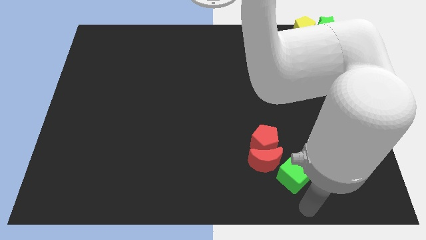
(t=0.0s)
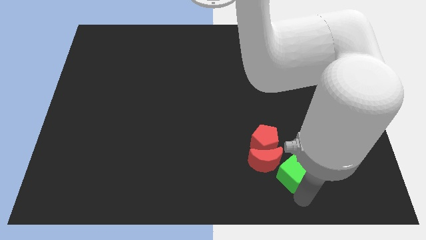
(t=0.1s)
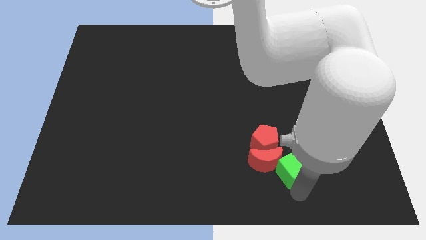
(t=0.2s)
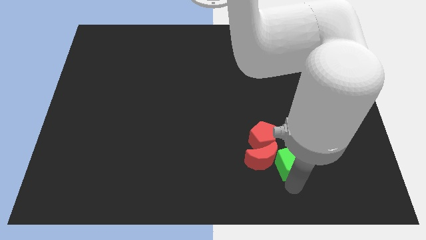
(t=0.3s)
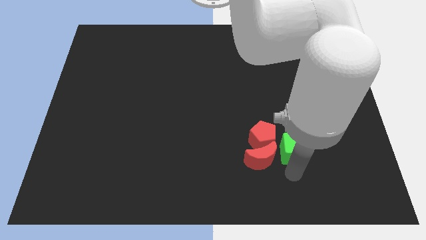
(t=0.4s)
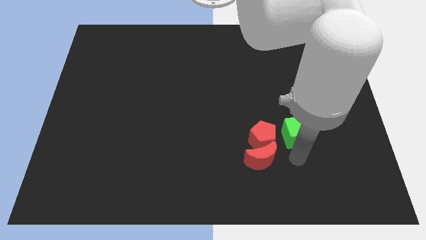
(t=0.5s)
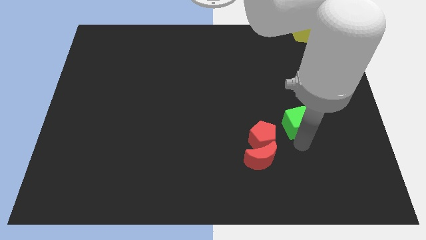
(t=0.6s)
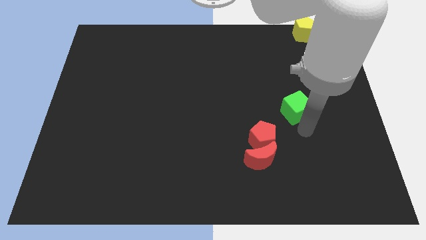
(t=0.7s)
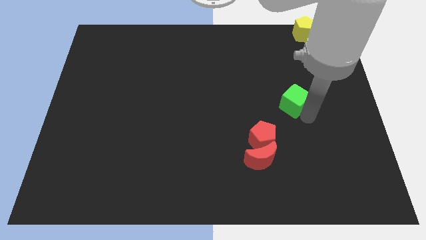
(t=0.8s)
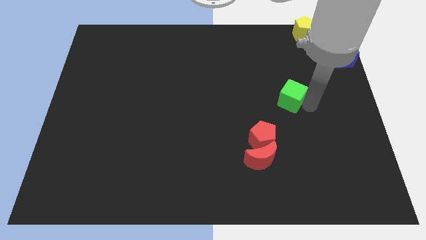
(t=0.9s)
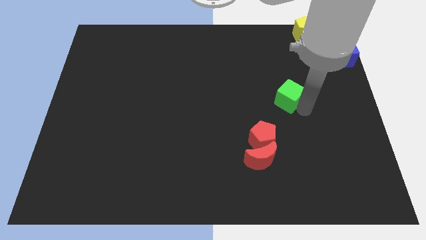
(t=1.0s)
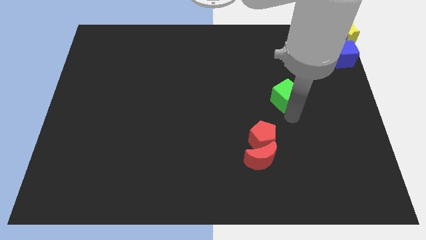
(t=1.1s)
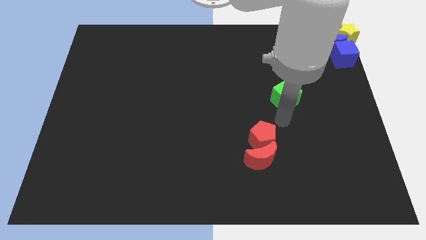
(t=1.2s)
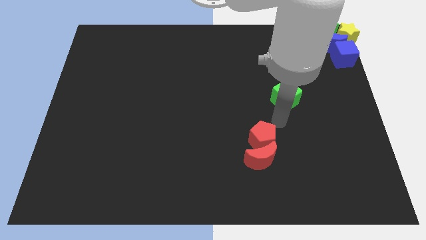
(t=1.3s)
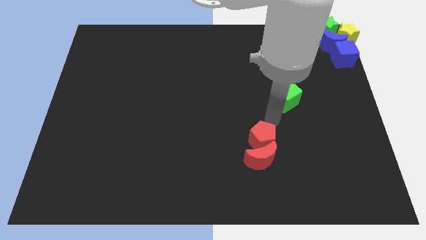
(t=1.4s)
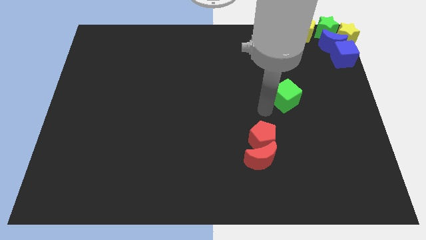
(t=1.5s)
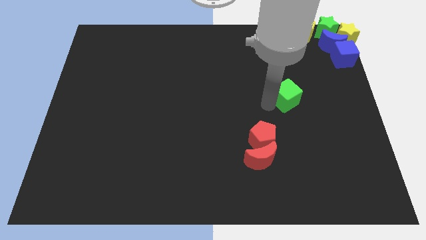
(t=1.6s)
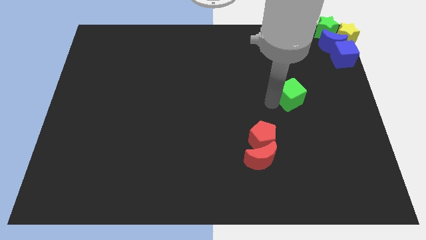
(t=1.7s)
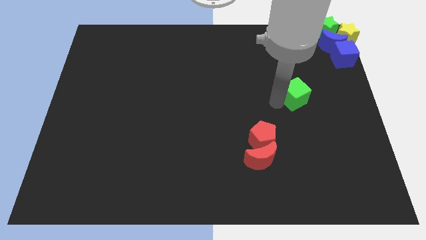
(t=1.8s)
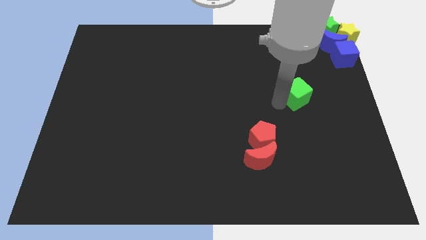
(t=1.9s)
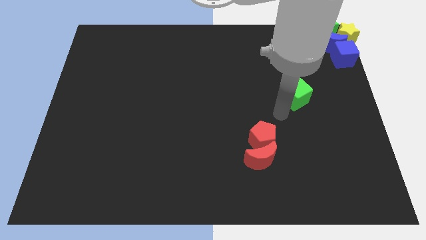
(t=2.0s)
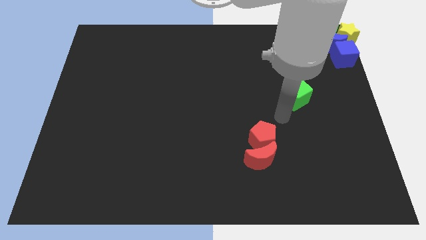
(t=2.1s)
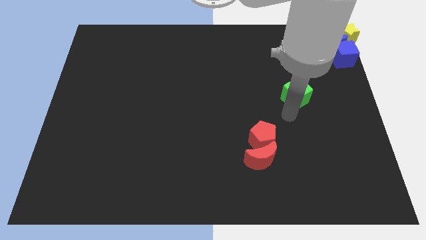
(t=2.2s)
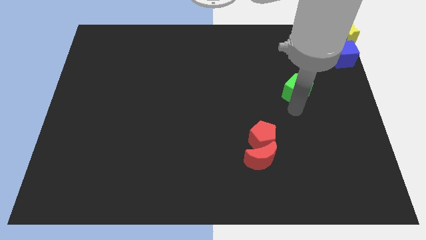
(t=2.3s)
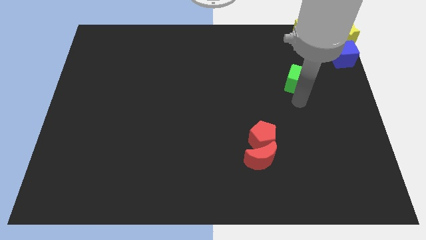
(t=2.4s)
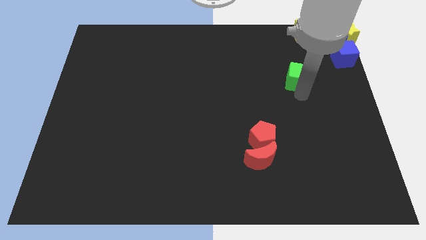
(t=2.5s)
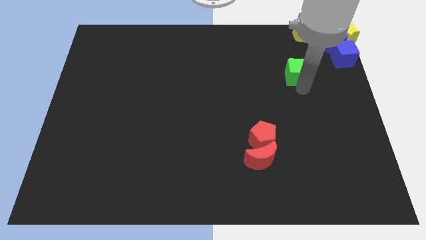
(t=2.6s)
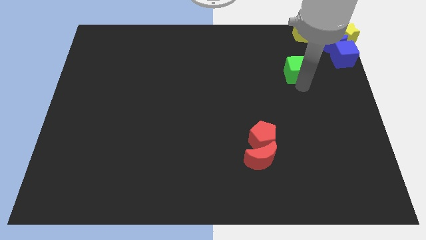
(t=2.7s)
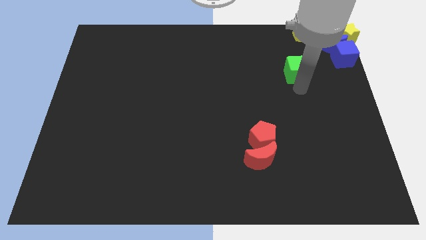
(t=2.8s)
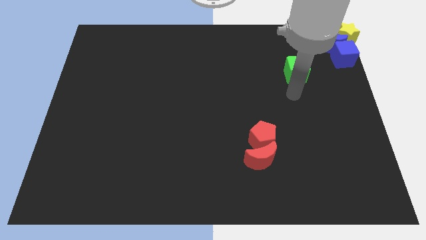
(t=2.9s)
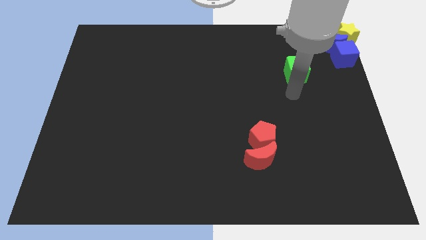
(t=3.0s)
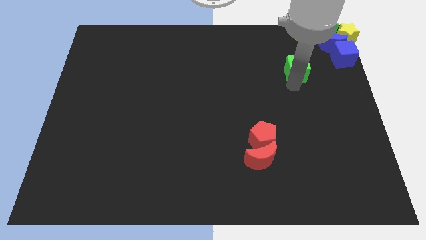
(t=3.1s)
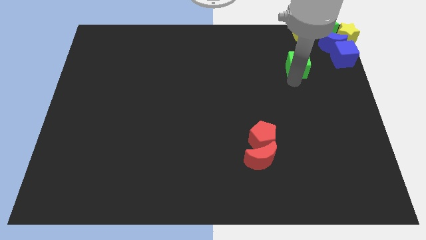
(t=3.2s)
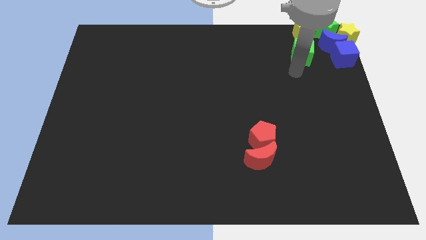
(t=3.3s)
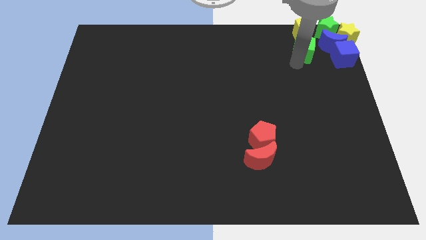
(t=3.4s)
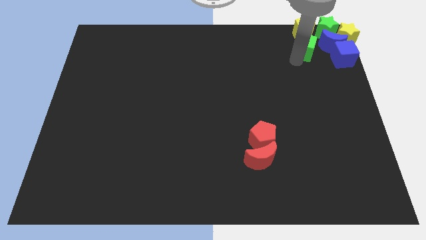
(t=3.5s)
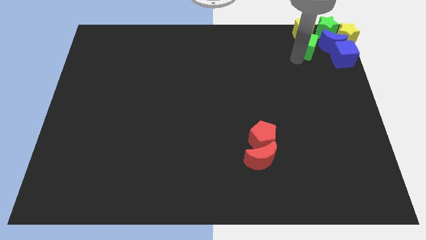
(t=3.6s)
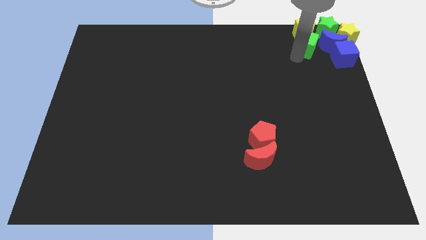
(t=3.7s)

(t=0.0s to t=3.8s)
move the green star into the blocks

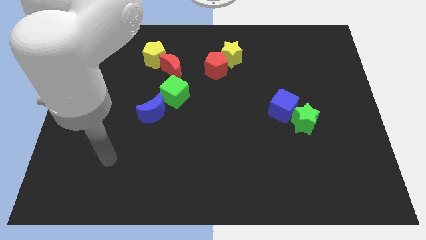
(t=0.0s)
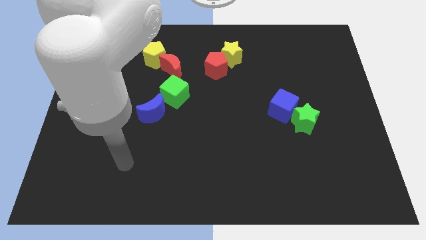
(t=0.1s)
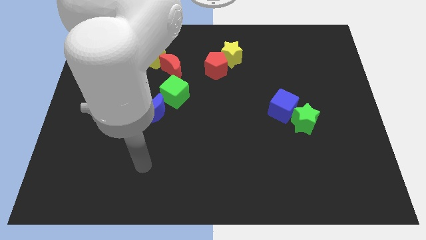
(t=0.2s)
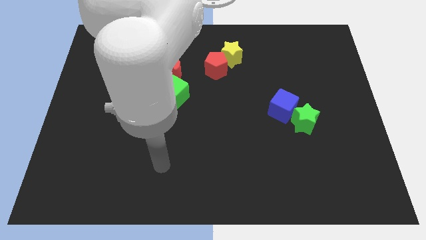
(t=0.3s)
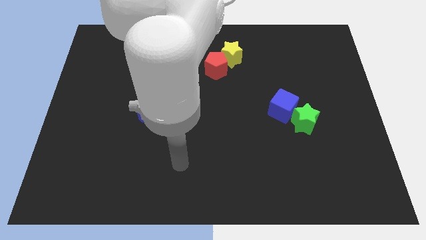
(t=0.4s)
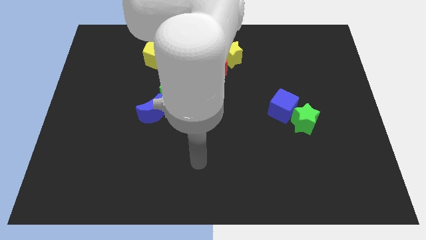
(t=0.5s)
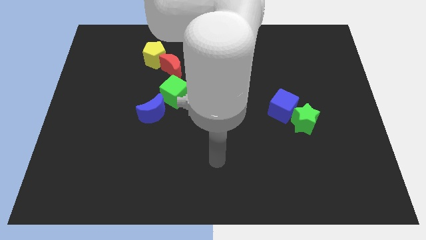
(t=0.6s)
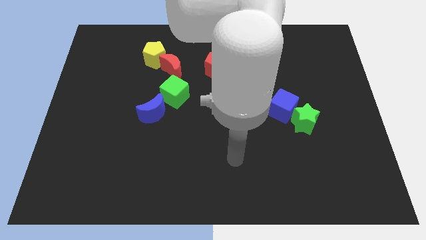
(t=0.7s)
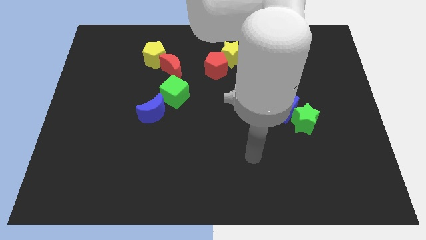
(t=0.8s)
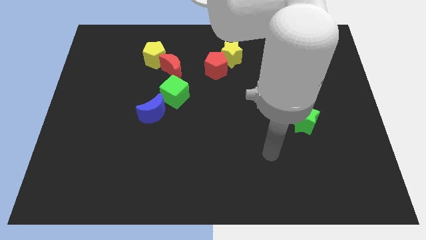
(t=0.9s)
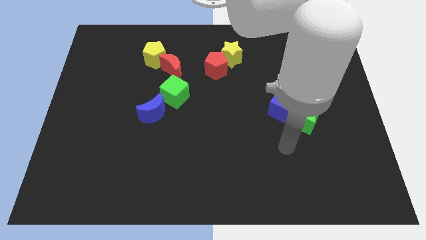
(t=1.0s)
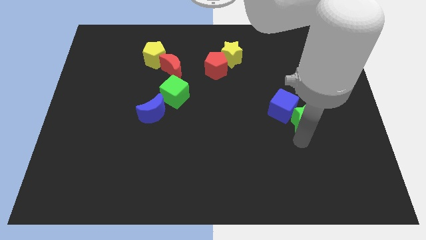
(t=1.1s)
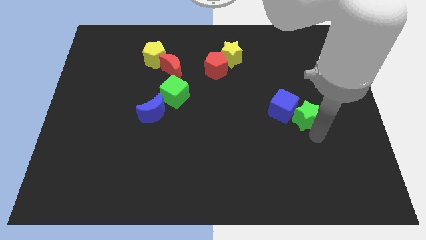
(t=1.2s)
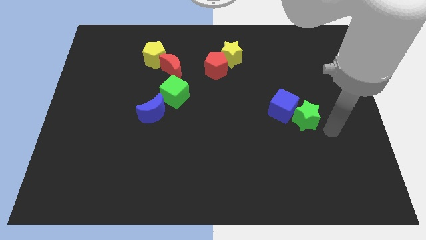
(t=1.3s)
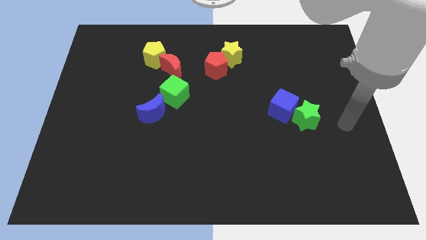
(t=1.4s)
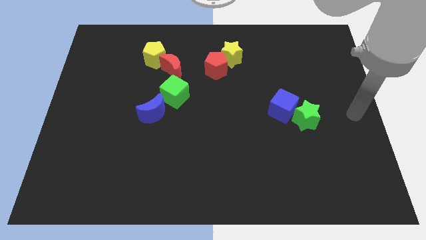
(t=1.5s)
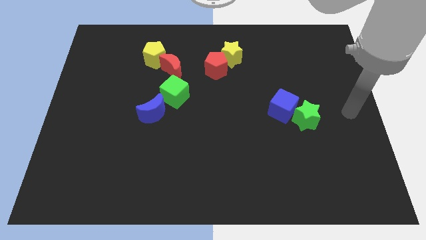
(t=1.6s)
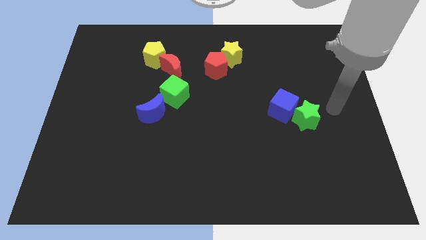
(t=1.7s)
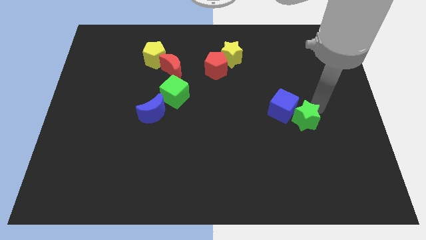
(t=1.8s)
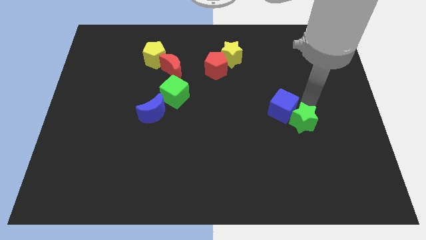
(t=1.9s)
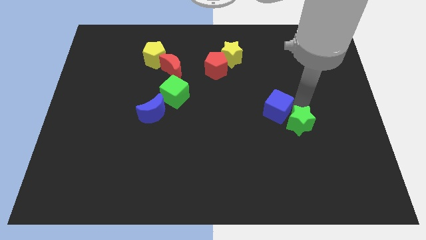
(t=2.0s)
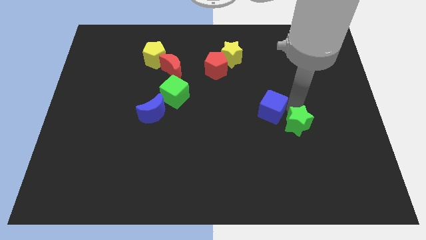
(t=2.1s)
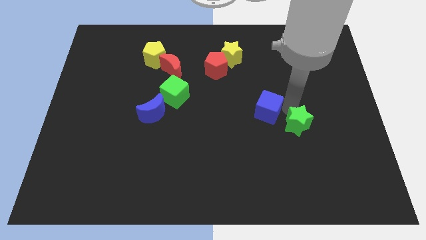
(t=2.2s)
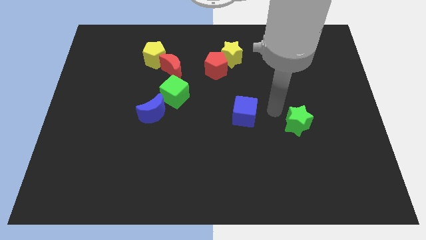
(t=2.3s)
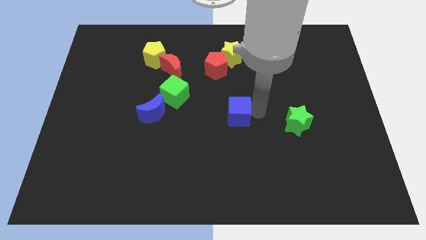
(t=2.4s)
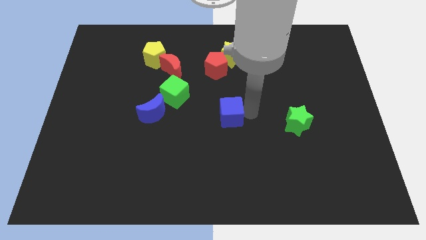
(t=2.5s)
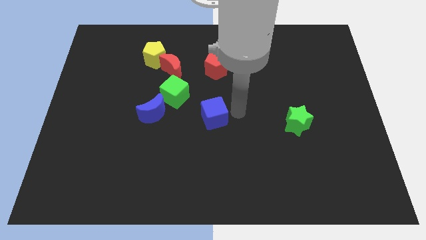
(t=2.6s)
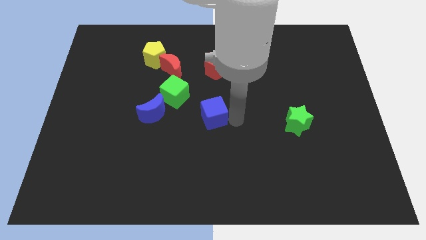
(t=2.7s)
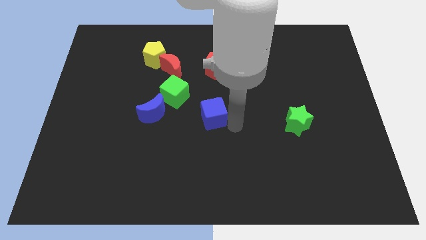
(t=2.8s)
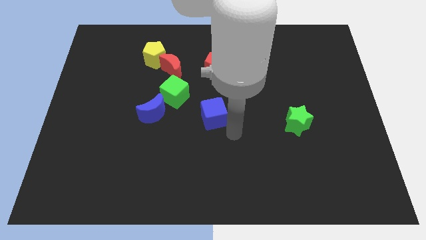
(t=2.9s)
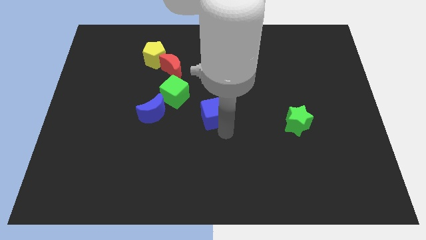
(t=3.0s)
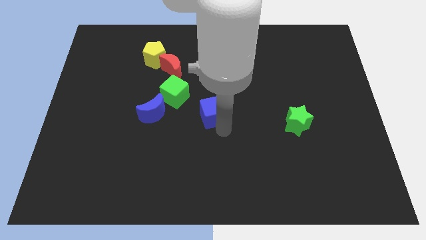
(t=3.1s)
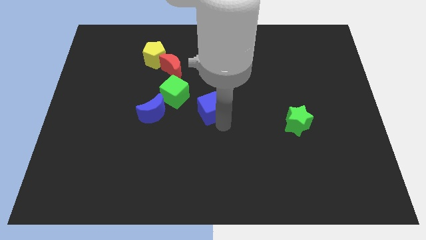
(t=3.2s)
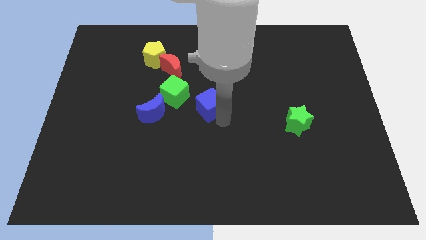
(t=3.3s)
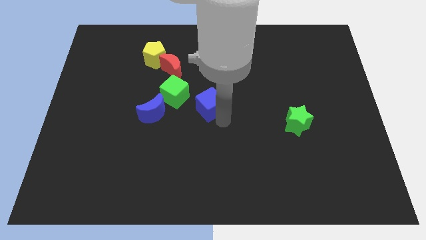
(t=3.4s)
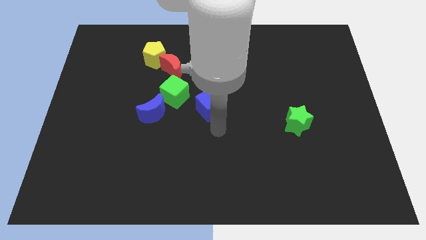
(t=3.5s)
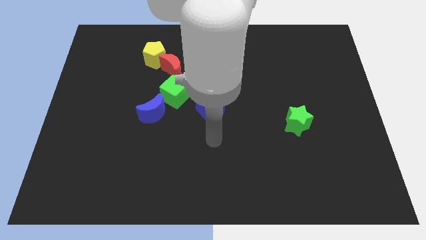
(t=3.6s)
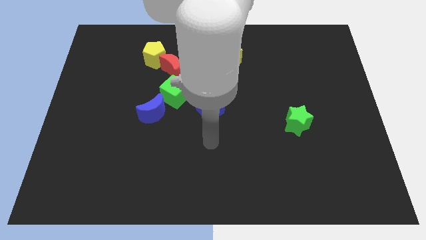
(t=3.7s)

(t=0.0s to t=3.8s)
separate the blue cube and the green star

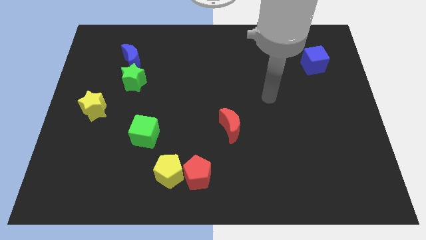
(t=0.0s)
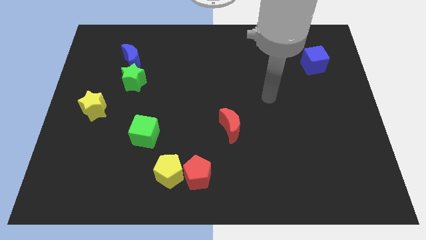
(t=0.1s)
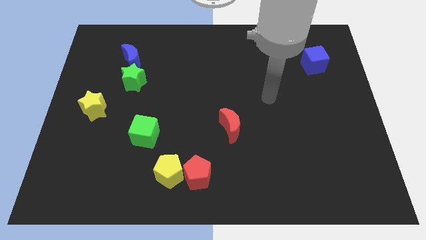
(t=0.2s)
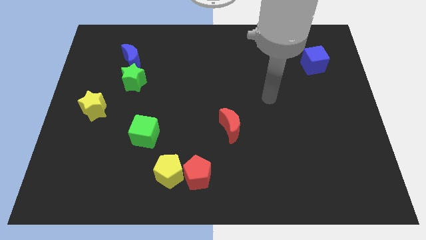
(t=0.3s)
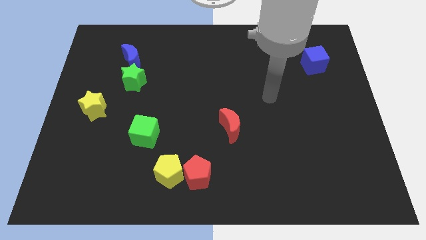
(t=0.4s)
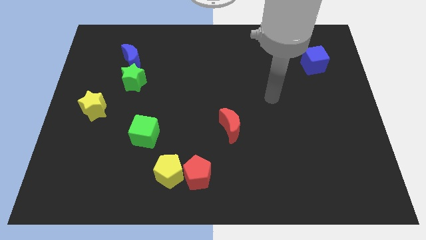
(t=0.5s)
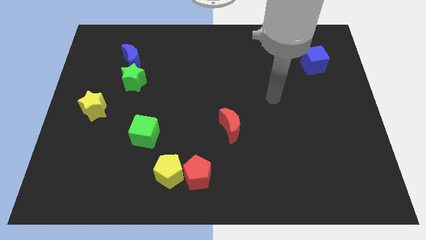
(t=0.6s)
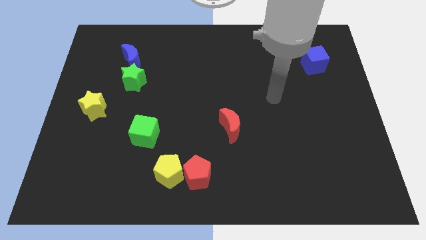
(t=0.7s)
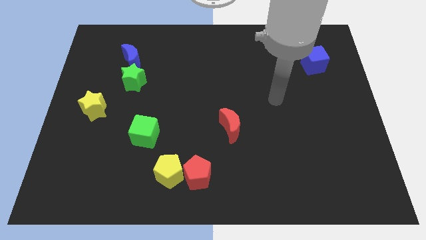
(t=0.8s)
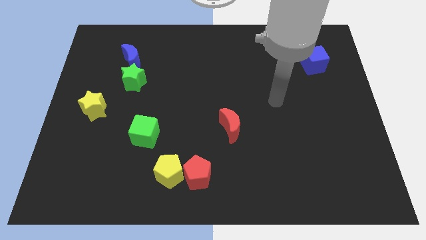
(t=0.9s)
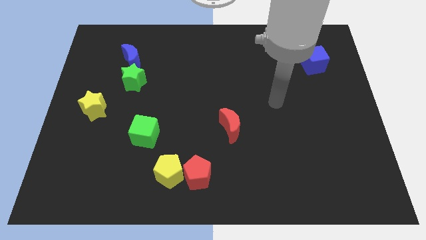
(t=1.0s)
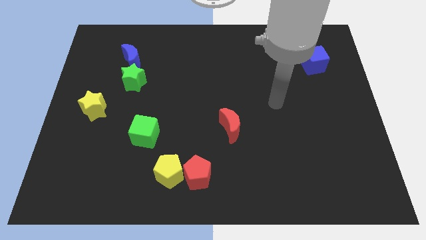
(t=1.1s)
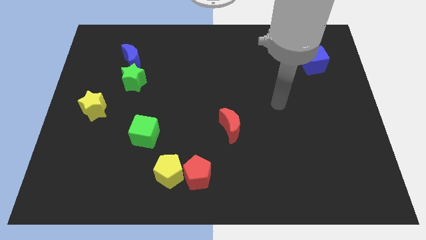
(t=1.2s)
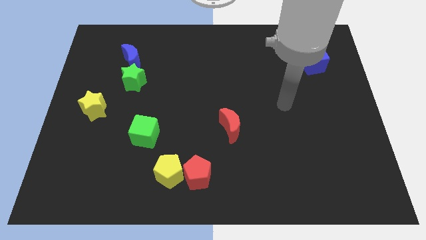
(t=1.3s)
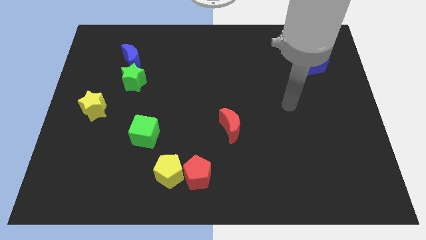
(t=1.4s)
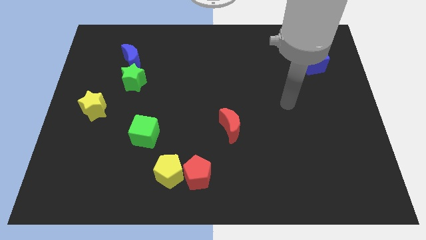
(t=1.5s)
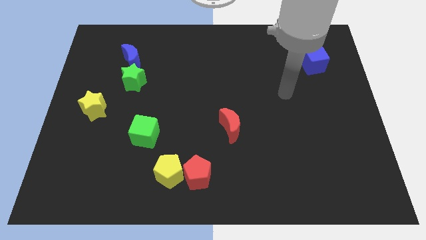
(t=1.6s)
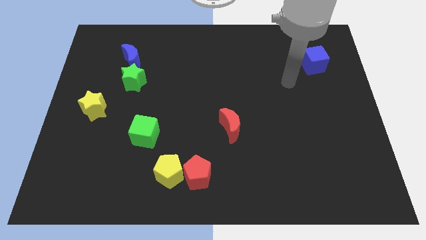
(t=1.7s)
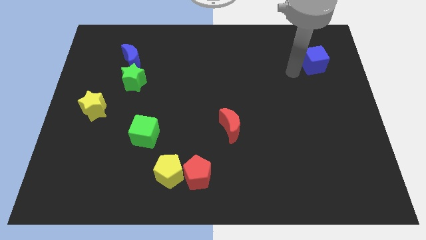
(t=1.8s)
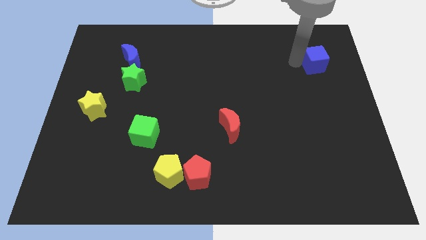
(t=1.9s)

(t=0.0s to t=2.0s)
move your arm to the left of the blue cube
